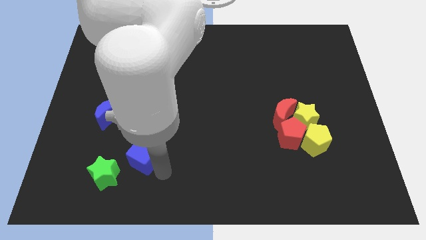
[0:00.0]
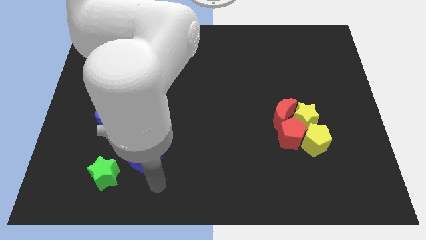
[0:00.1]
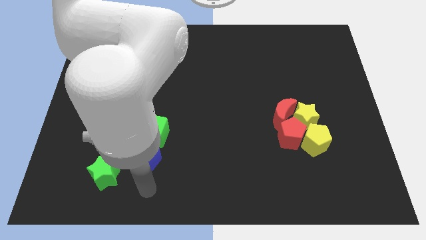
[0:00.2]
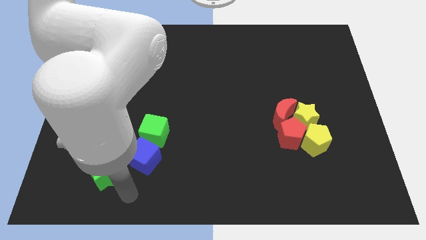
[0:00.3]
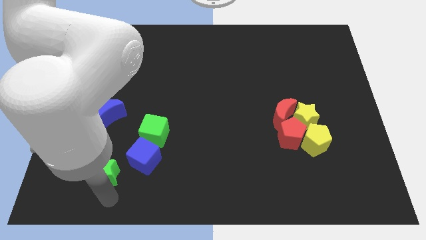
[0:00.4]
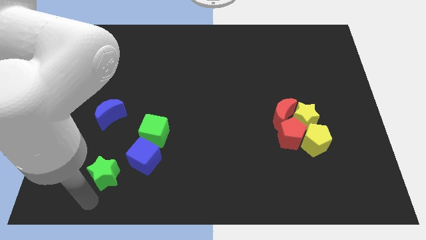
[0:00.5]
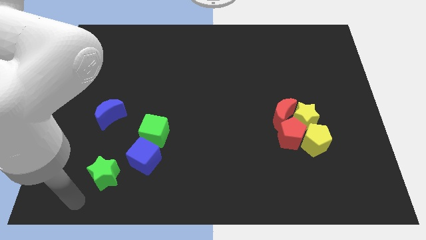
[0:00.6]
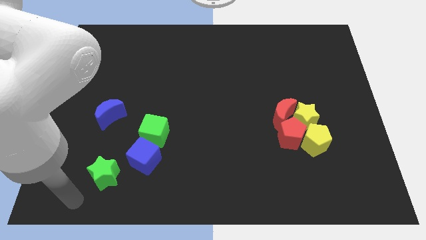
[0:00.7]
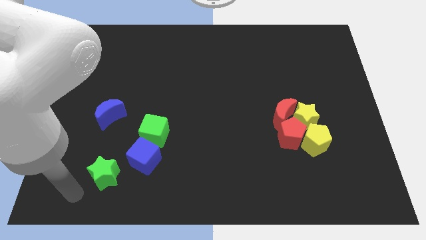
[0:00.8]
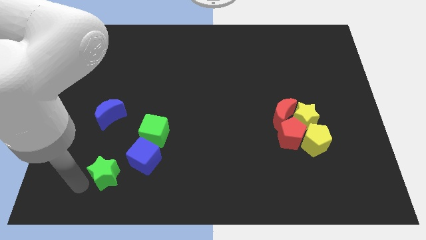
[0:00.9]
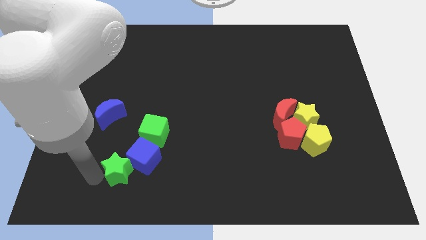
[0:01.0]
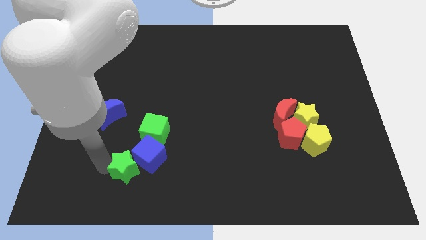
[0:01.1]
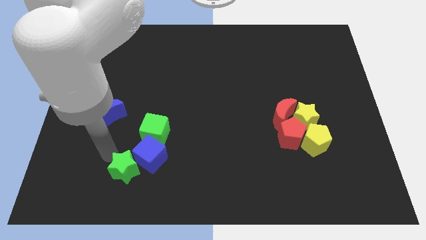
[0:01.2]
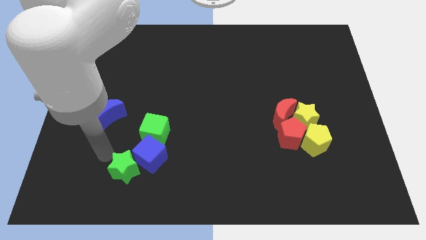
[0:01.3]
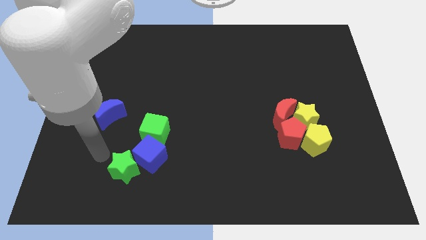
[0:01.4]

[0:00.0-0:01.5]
push the green star below into the blue cube

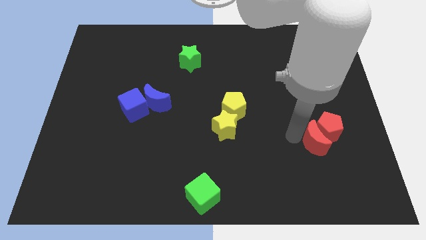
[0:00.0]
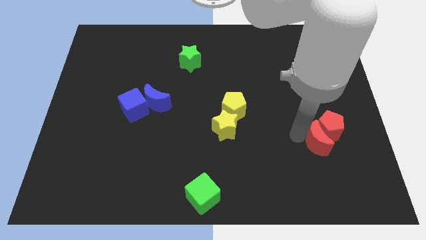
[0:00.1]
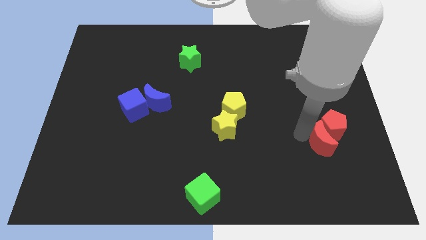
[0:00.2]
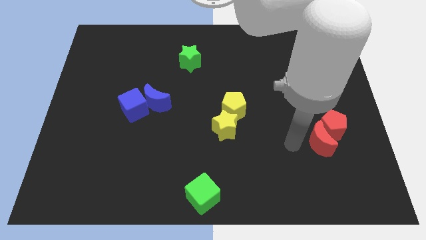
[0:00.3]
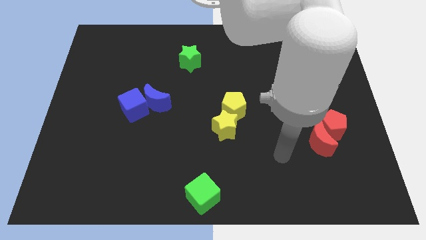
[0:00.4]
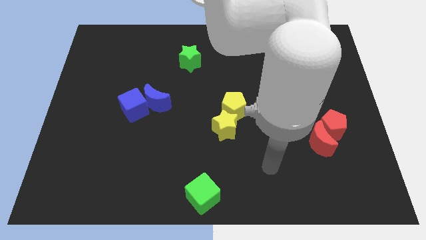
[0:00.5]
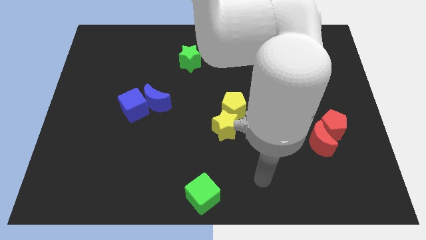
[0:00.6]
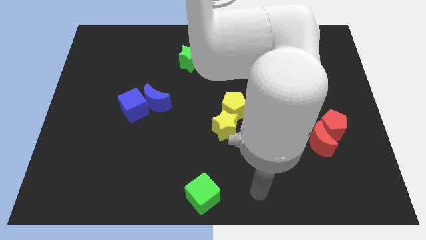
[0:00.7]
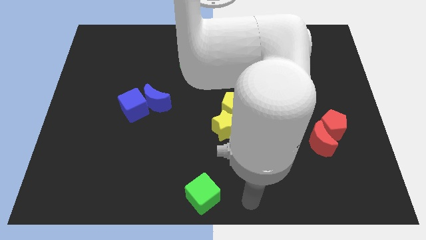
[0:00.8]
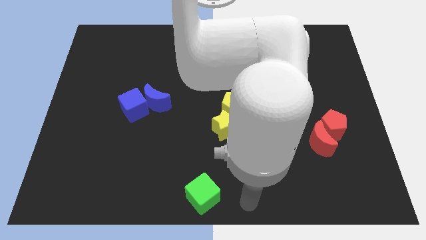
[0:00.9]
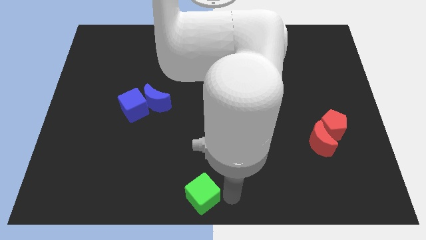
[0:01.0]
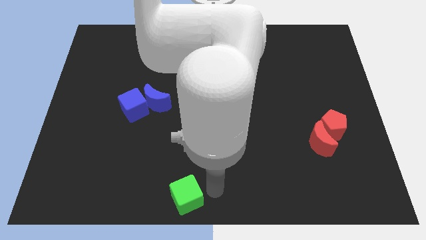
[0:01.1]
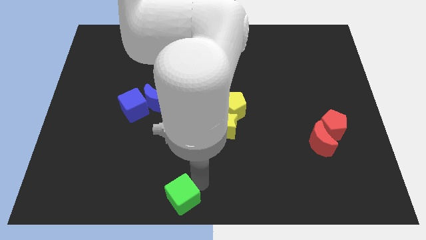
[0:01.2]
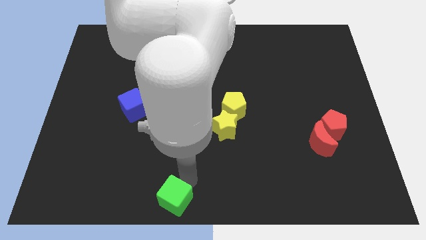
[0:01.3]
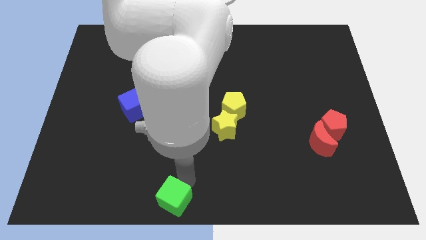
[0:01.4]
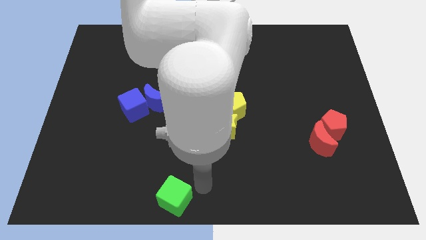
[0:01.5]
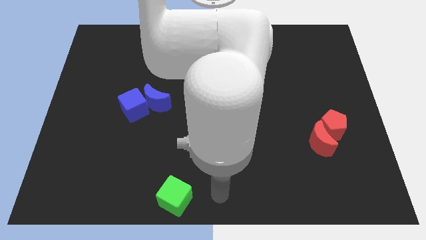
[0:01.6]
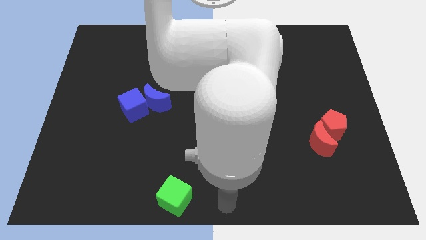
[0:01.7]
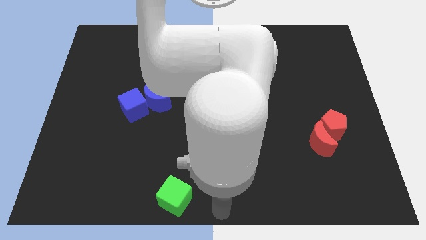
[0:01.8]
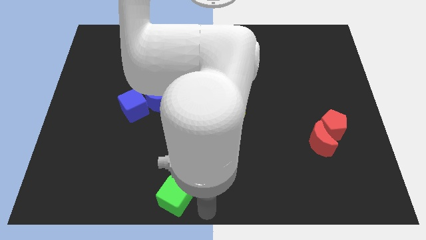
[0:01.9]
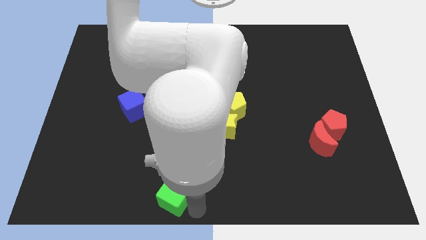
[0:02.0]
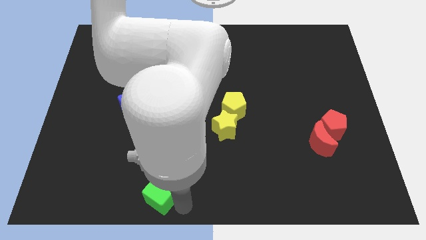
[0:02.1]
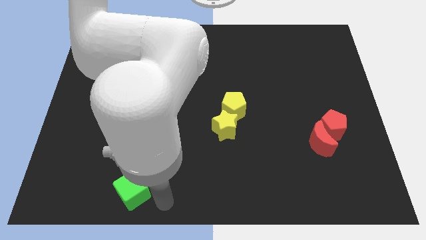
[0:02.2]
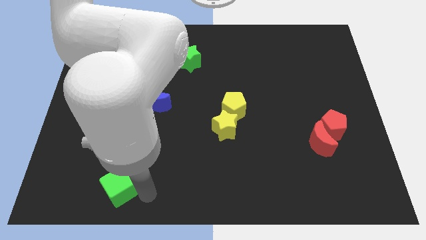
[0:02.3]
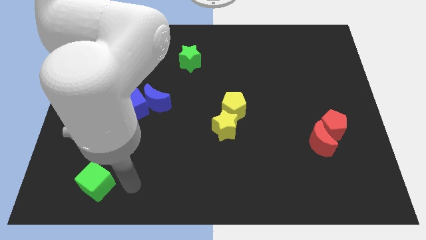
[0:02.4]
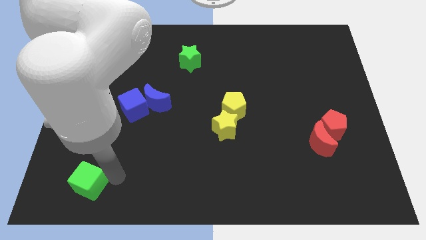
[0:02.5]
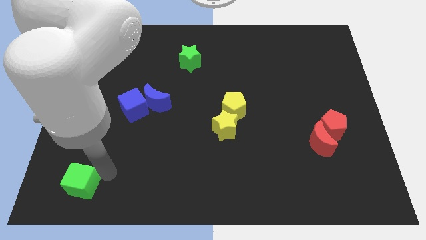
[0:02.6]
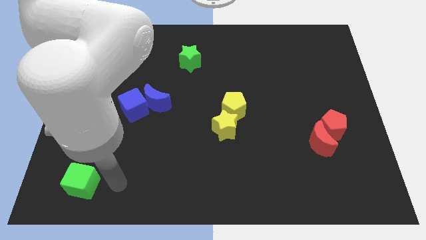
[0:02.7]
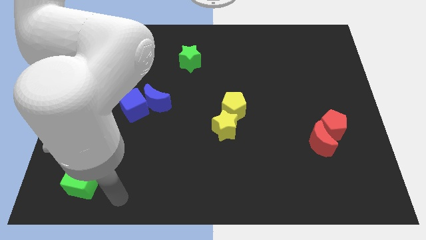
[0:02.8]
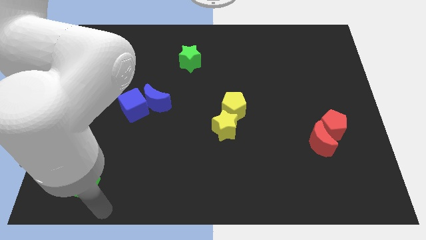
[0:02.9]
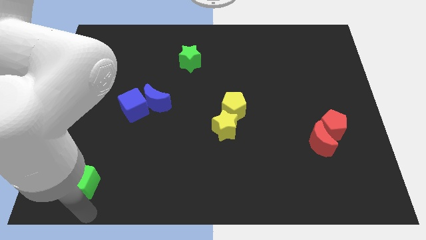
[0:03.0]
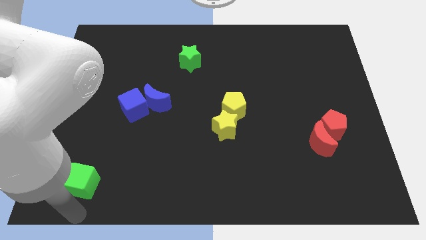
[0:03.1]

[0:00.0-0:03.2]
push the green cube towards the left side

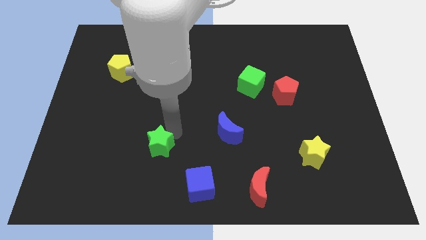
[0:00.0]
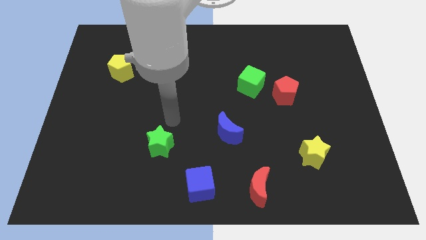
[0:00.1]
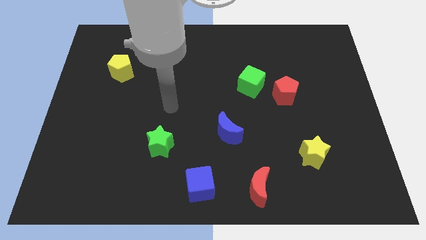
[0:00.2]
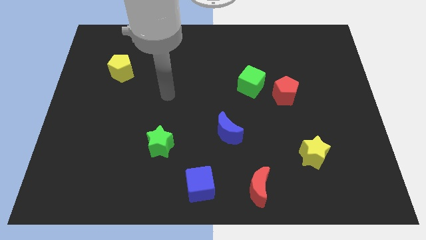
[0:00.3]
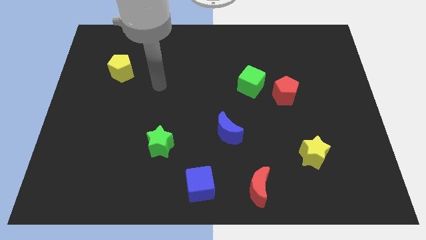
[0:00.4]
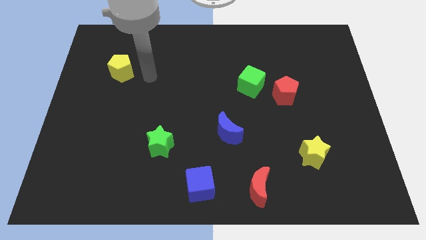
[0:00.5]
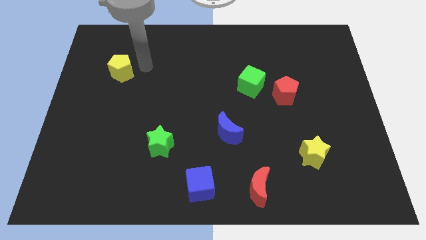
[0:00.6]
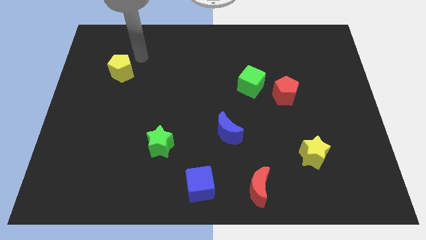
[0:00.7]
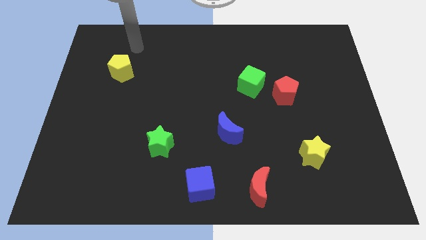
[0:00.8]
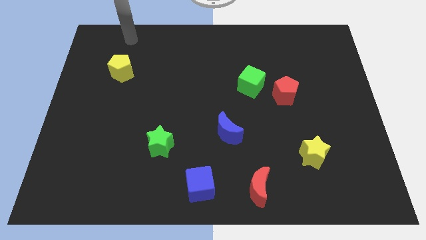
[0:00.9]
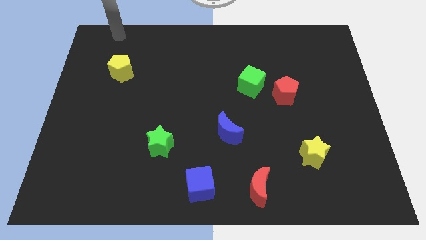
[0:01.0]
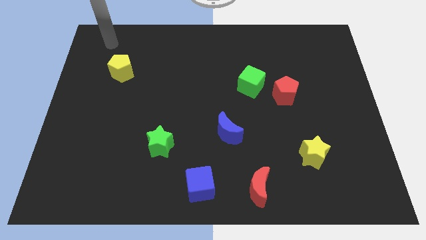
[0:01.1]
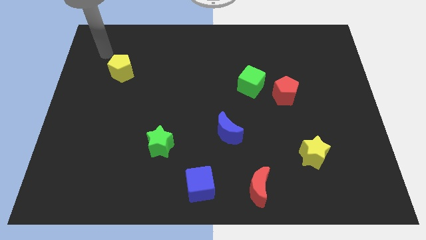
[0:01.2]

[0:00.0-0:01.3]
move your hand away from the green star

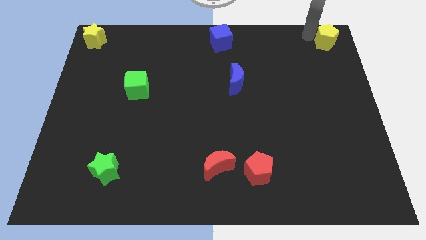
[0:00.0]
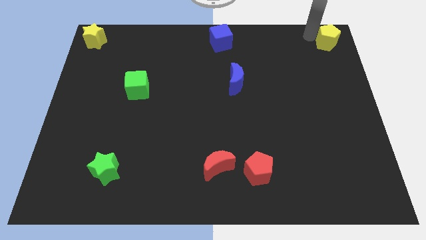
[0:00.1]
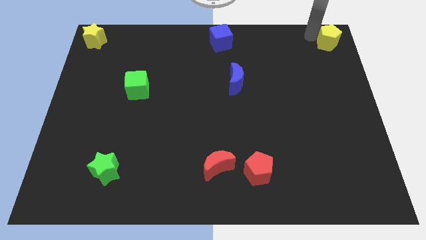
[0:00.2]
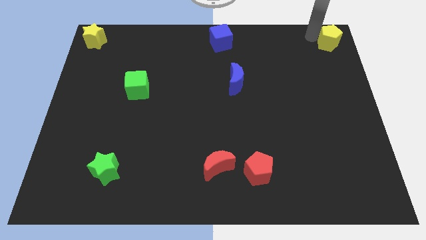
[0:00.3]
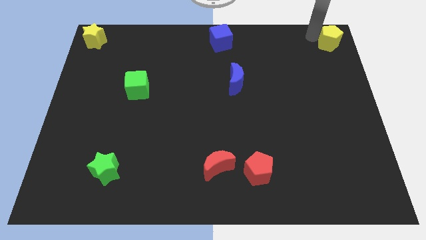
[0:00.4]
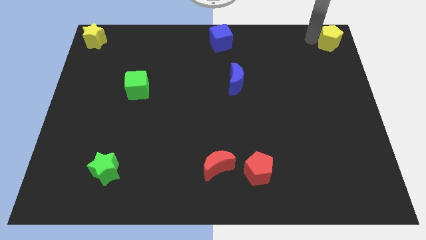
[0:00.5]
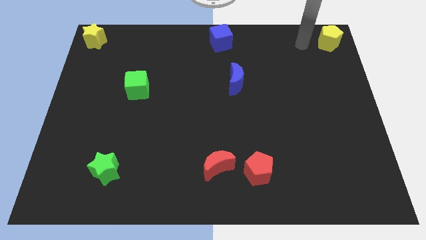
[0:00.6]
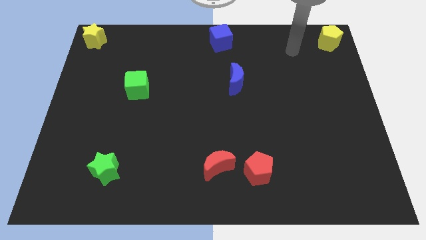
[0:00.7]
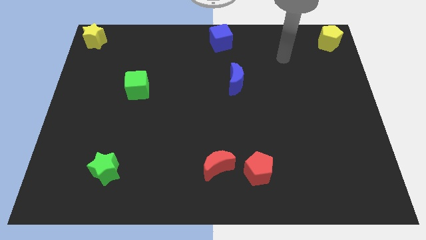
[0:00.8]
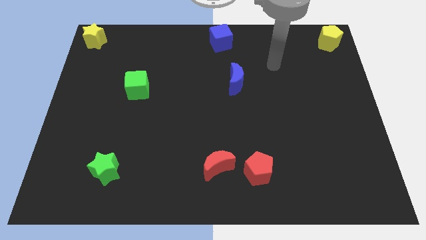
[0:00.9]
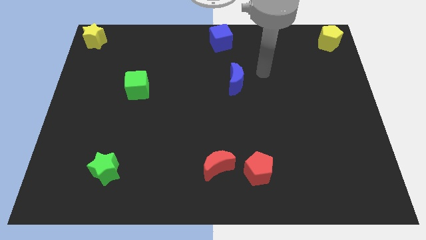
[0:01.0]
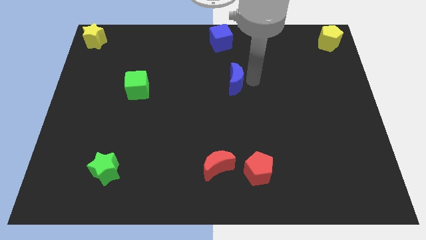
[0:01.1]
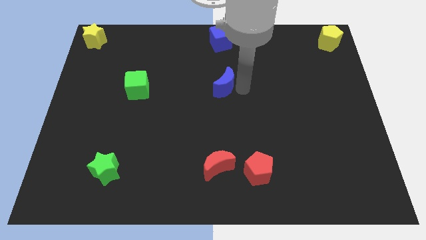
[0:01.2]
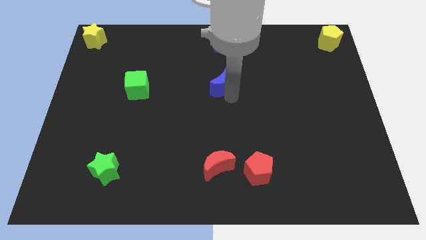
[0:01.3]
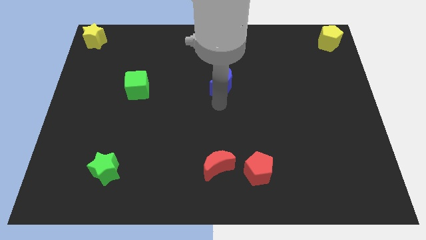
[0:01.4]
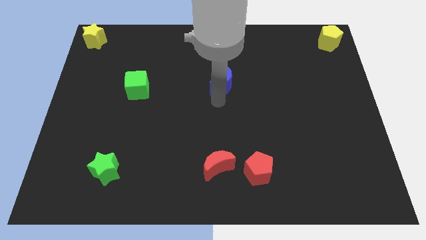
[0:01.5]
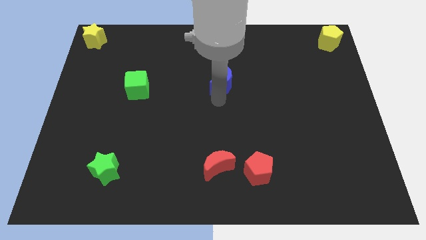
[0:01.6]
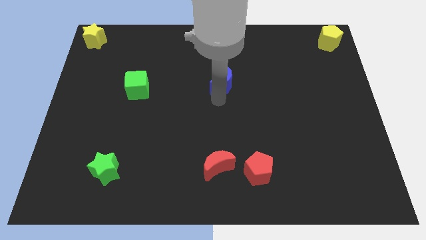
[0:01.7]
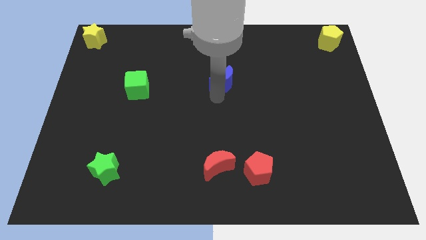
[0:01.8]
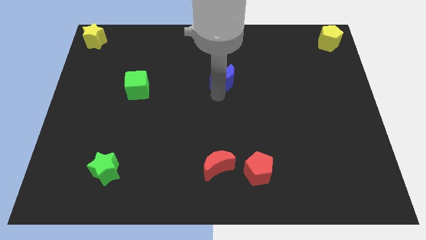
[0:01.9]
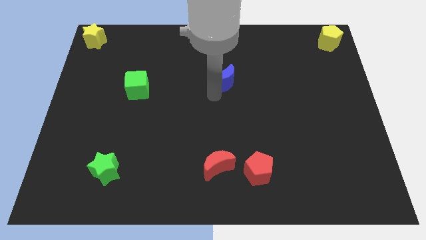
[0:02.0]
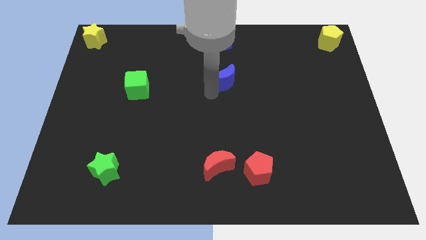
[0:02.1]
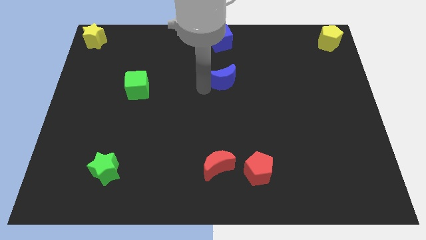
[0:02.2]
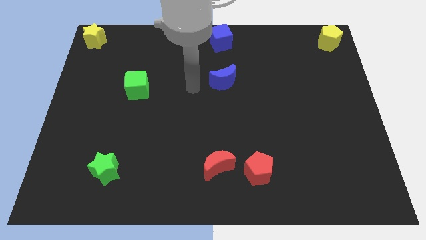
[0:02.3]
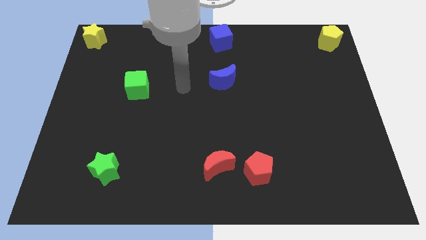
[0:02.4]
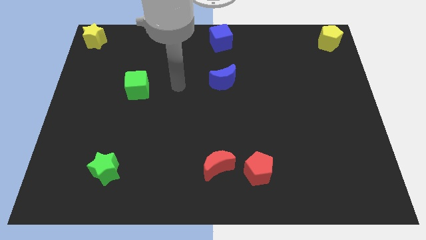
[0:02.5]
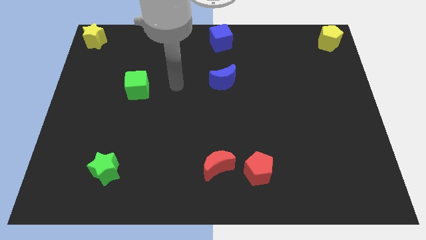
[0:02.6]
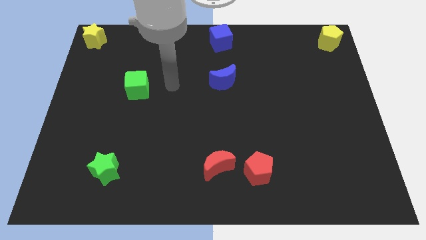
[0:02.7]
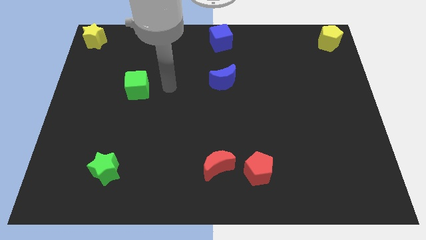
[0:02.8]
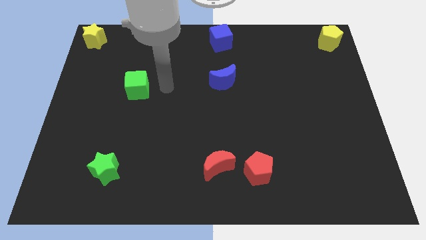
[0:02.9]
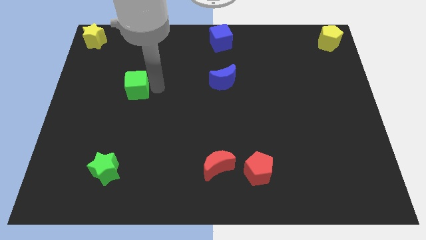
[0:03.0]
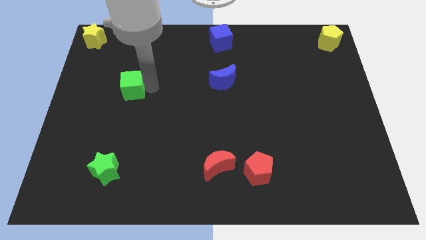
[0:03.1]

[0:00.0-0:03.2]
slightly move the blue moon towards the blue cube
